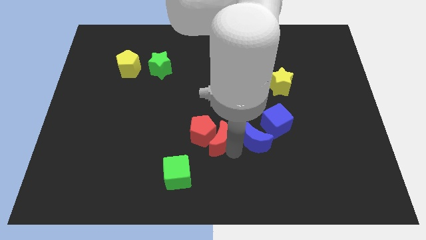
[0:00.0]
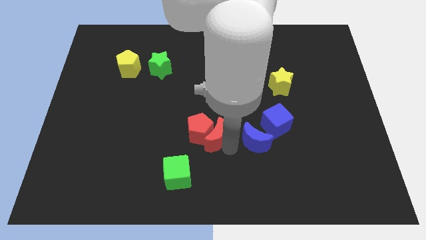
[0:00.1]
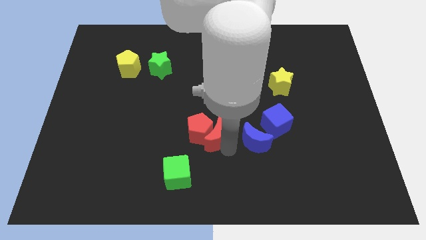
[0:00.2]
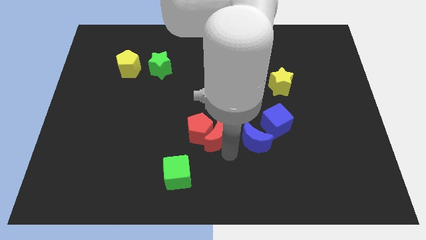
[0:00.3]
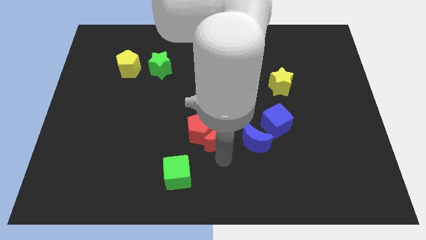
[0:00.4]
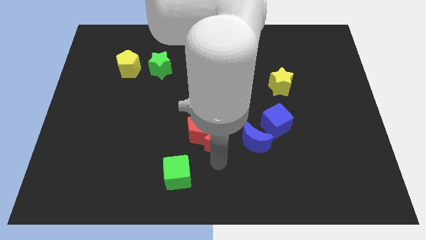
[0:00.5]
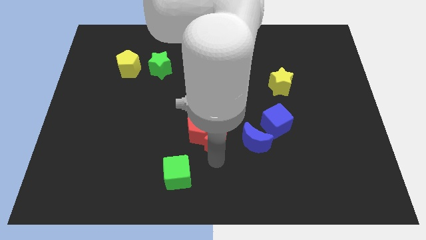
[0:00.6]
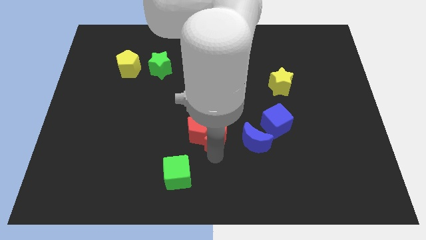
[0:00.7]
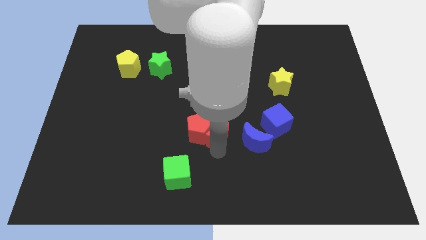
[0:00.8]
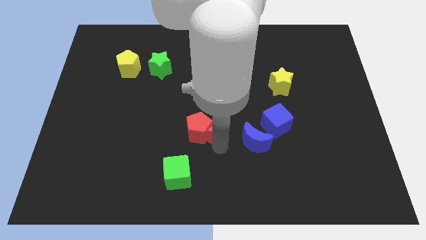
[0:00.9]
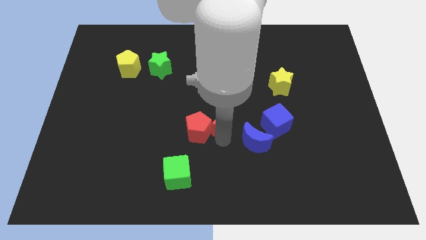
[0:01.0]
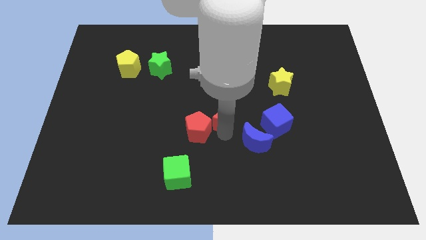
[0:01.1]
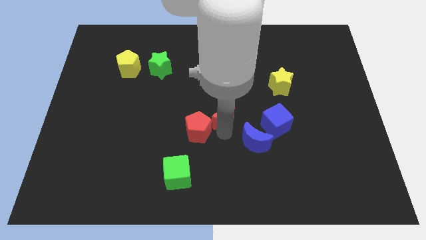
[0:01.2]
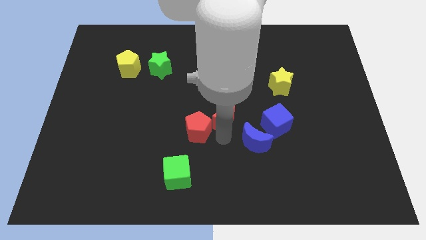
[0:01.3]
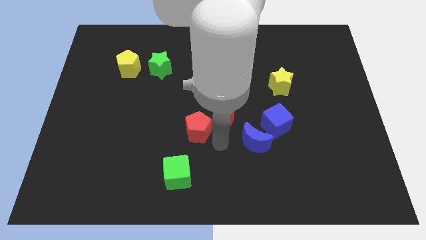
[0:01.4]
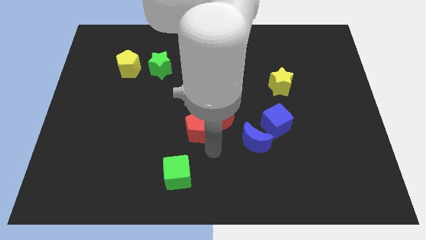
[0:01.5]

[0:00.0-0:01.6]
move the red crescent diagonally to the right of the red pentagon

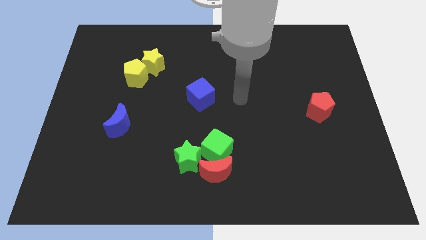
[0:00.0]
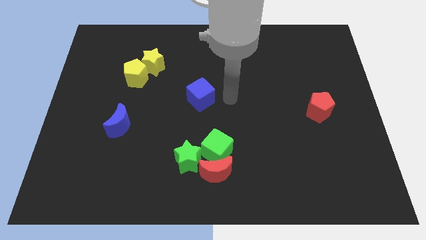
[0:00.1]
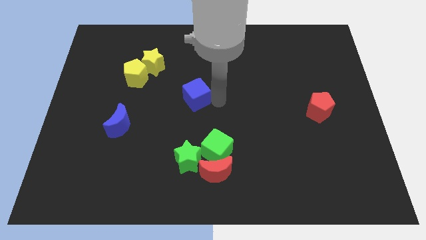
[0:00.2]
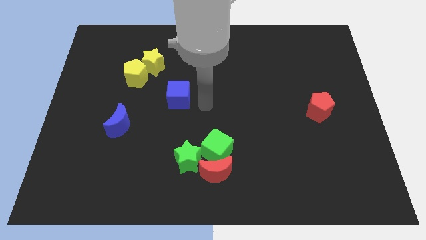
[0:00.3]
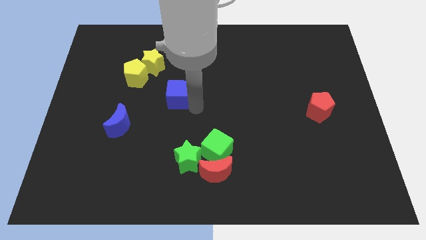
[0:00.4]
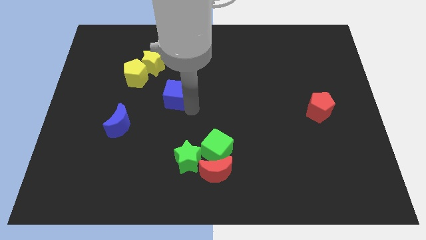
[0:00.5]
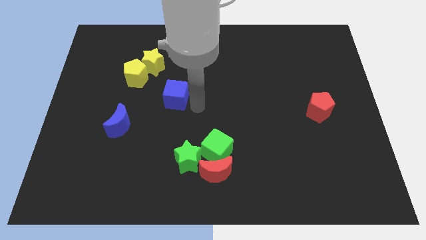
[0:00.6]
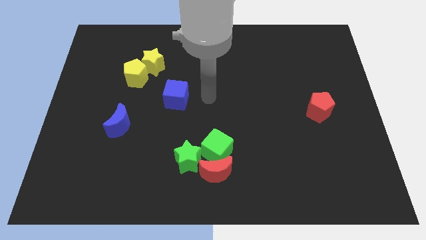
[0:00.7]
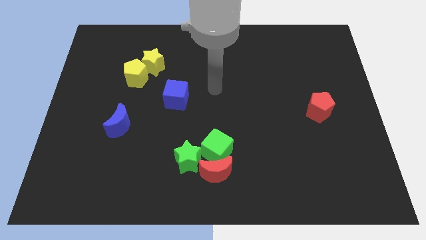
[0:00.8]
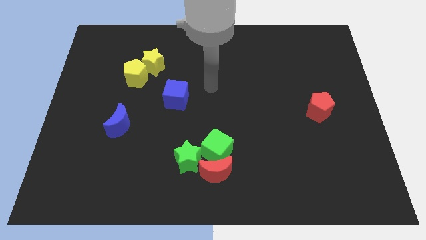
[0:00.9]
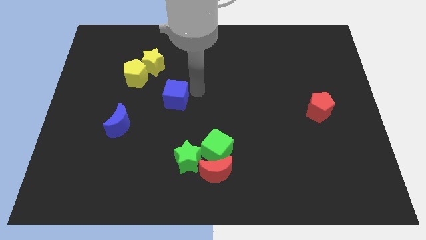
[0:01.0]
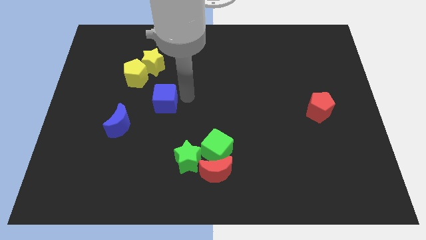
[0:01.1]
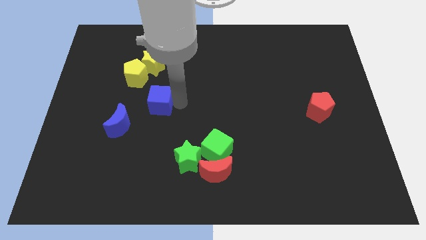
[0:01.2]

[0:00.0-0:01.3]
push the blue cube towards the left side of the board

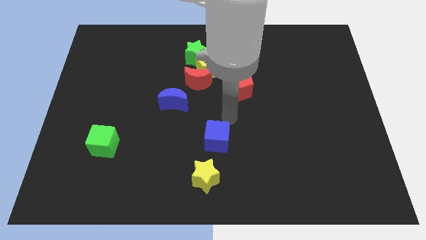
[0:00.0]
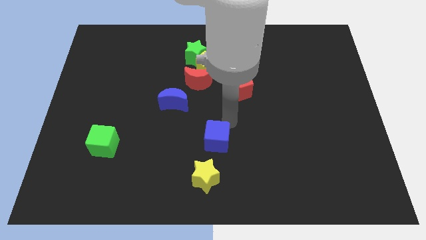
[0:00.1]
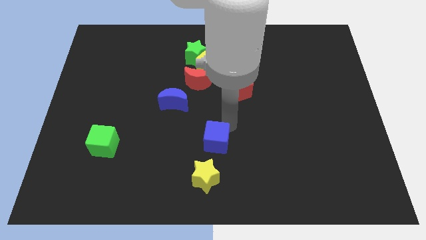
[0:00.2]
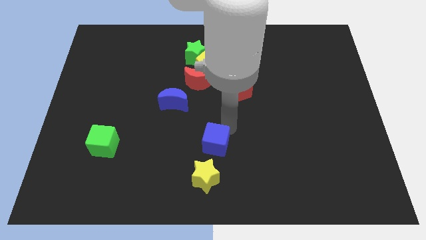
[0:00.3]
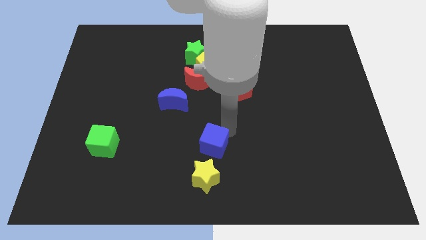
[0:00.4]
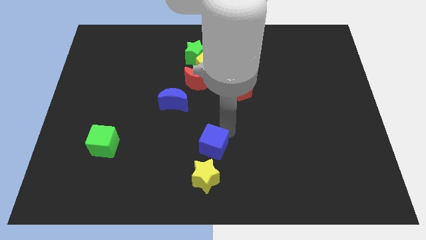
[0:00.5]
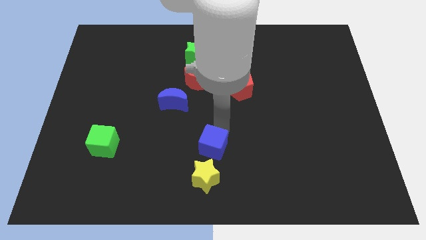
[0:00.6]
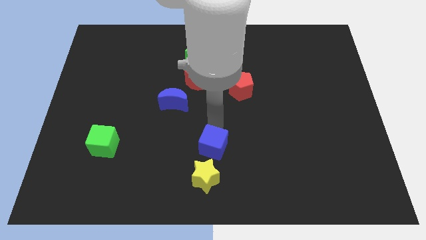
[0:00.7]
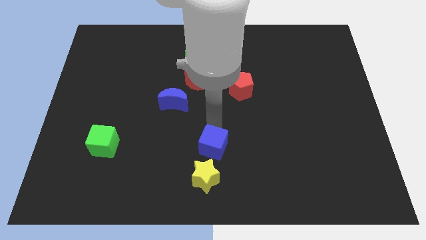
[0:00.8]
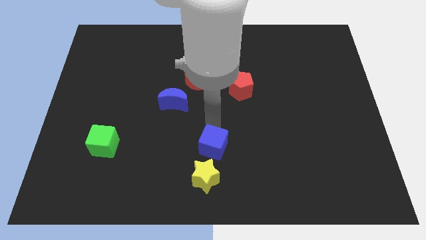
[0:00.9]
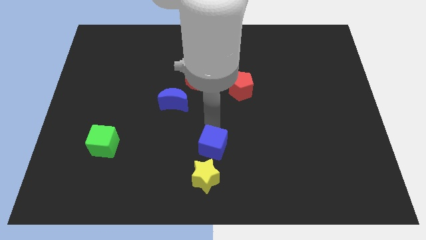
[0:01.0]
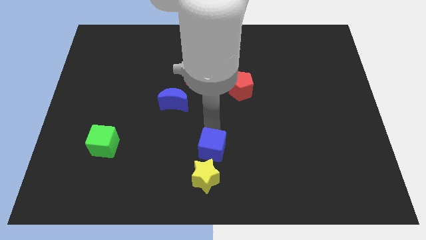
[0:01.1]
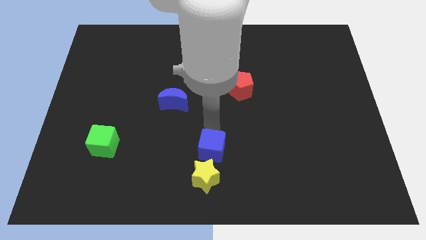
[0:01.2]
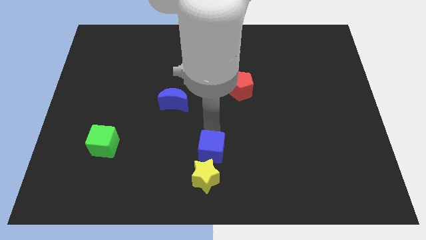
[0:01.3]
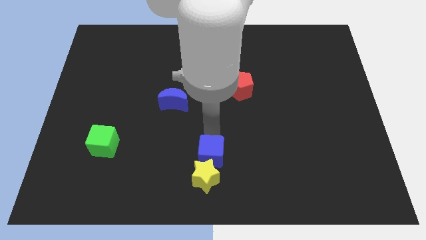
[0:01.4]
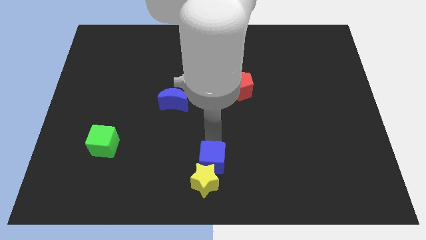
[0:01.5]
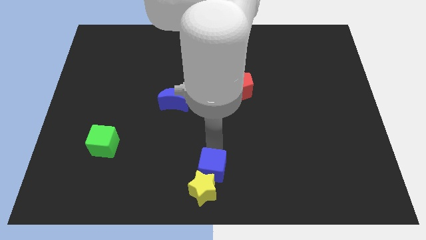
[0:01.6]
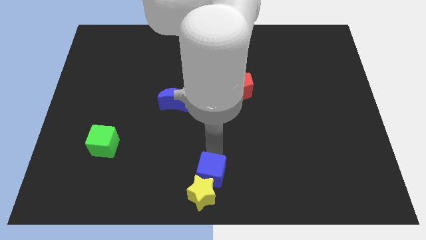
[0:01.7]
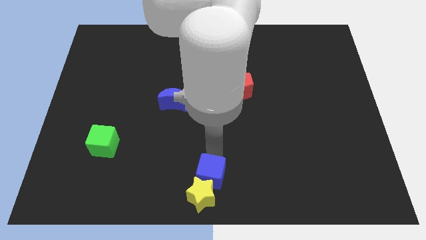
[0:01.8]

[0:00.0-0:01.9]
push the blue cube into the yellow star

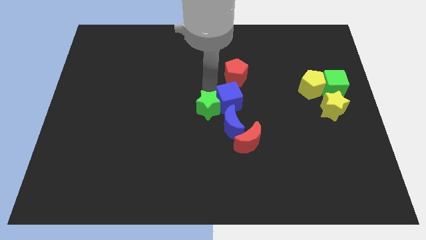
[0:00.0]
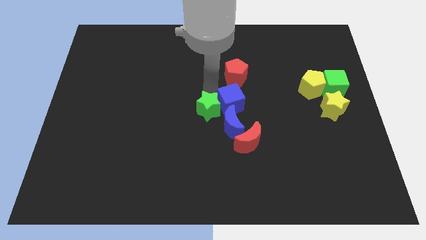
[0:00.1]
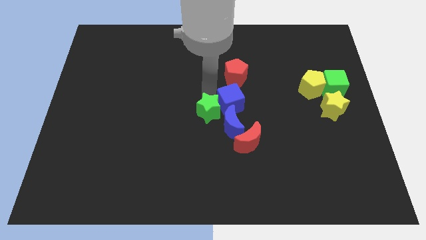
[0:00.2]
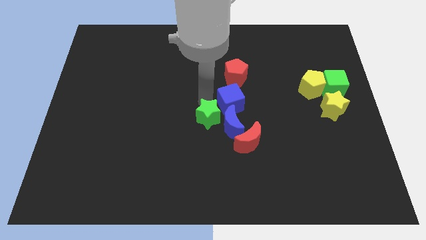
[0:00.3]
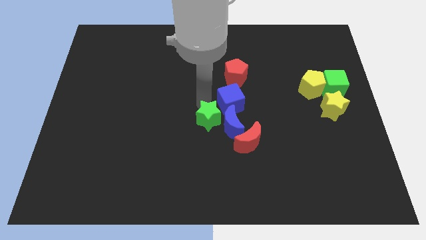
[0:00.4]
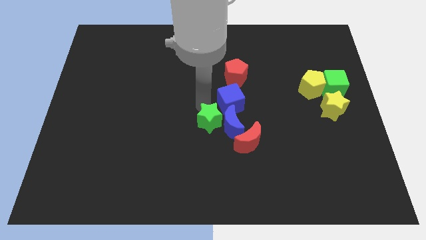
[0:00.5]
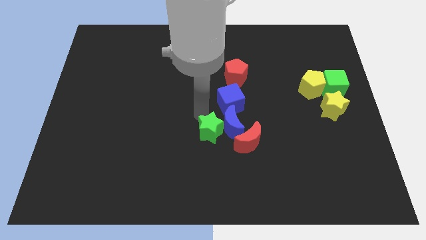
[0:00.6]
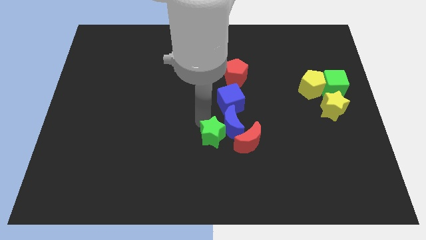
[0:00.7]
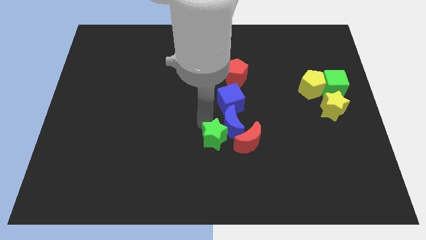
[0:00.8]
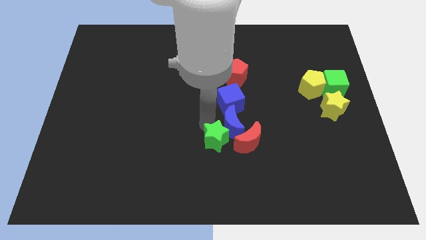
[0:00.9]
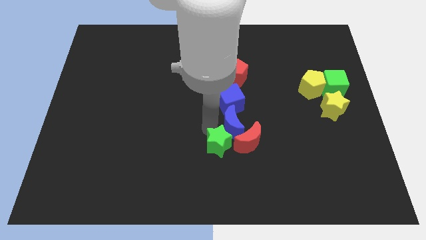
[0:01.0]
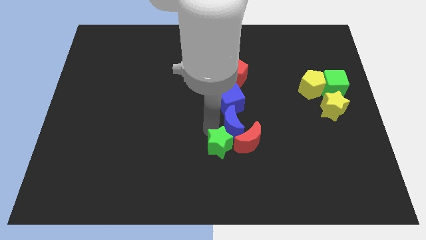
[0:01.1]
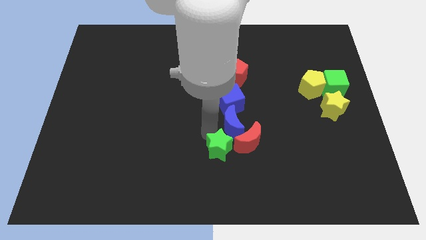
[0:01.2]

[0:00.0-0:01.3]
push the green star to the left of the red crescent

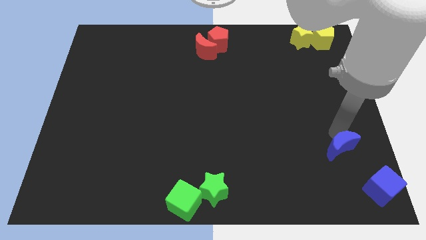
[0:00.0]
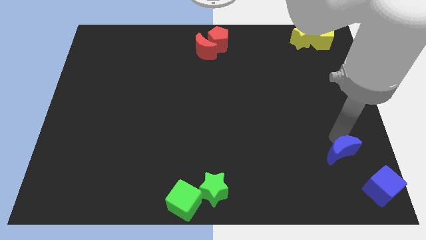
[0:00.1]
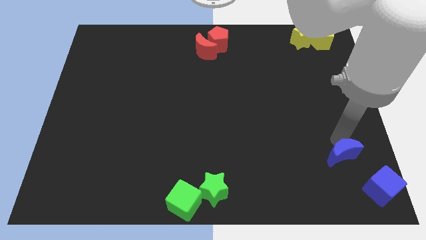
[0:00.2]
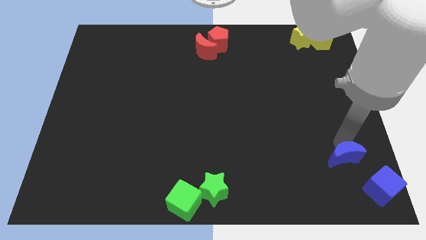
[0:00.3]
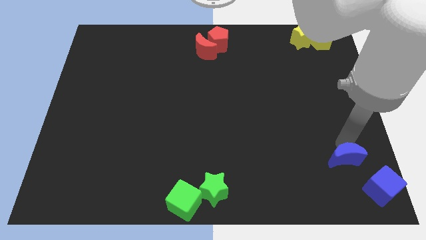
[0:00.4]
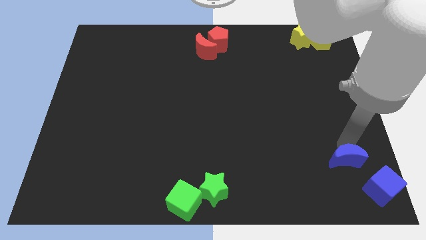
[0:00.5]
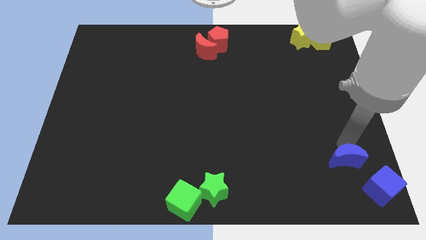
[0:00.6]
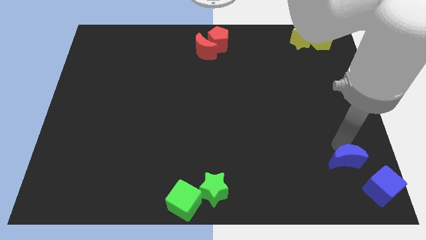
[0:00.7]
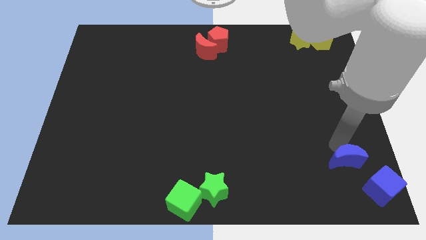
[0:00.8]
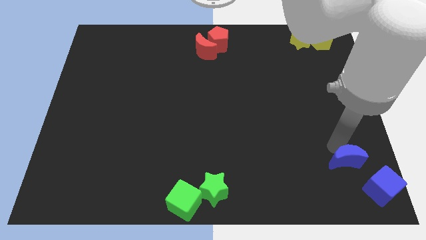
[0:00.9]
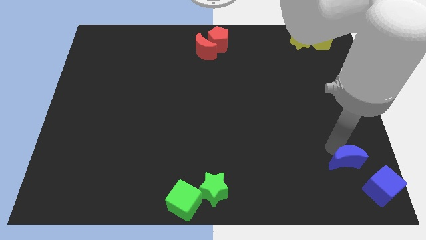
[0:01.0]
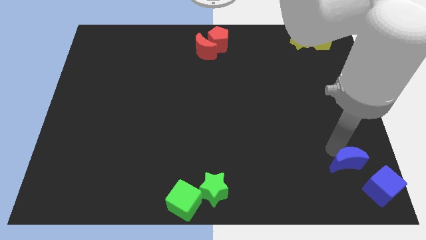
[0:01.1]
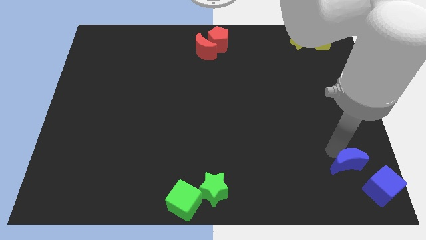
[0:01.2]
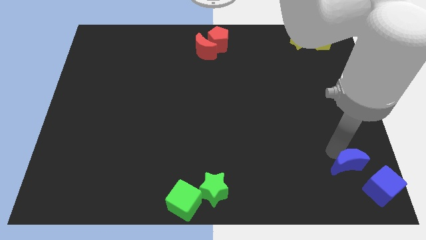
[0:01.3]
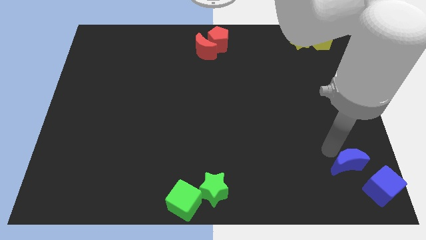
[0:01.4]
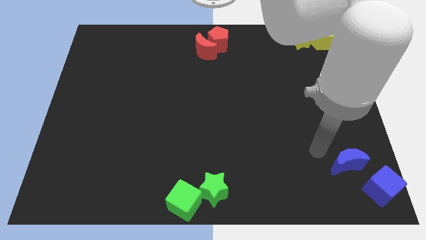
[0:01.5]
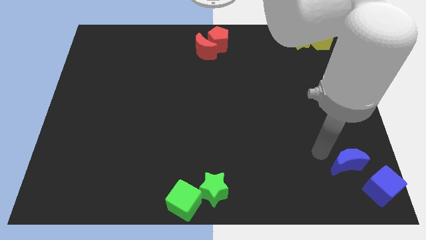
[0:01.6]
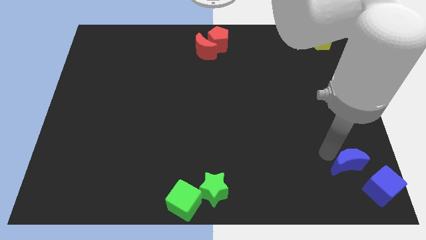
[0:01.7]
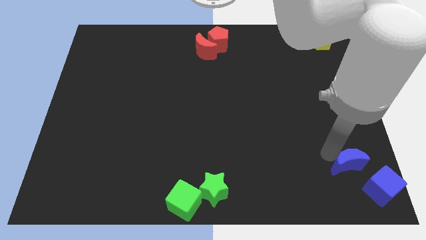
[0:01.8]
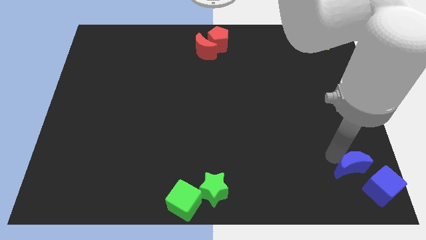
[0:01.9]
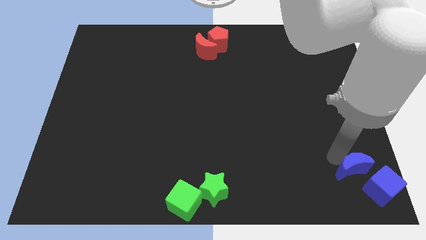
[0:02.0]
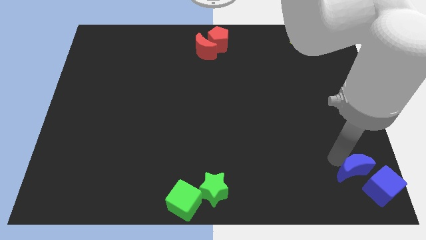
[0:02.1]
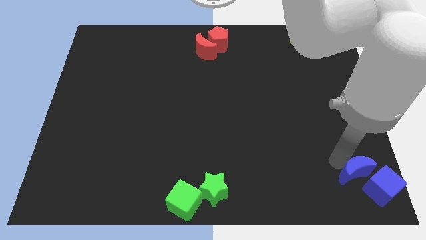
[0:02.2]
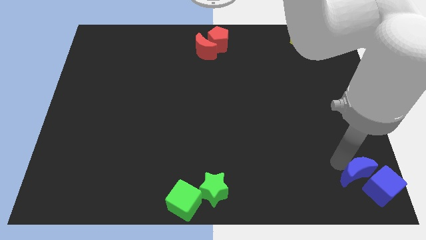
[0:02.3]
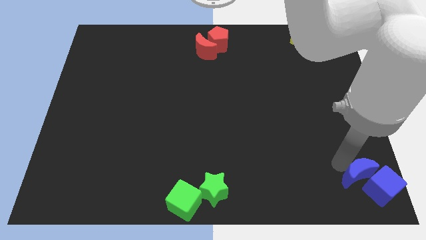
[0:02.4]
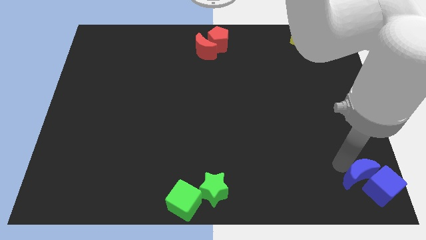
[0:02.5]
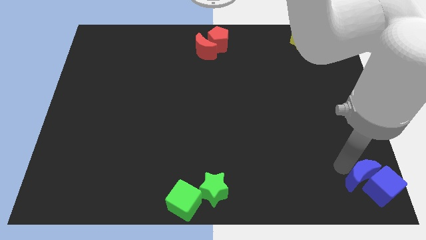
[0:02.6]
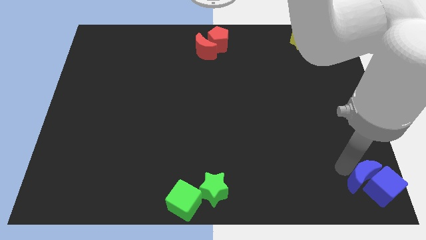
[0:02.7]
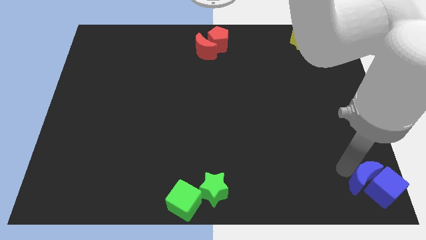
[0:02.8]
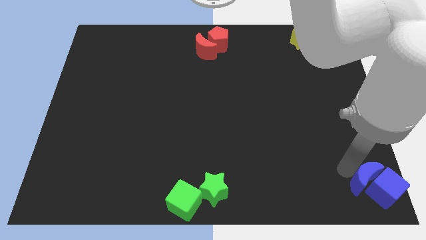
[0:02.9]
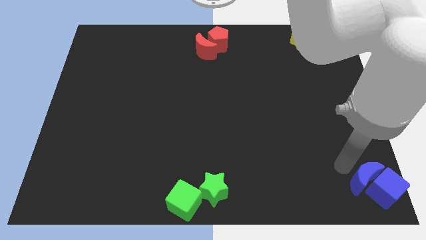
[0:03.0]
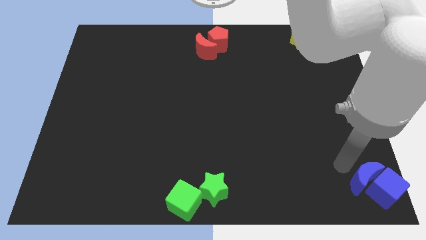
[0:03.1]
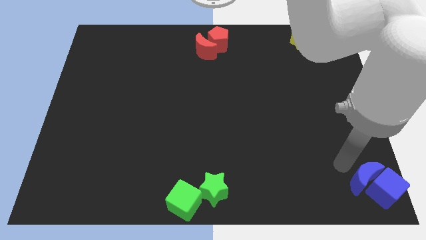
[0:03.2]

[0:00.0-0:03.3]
move the blue moon to the blue cube
